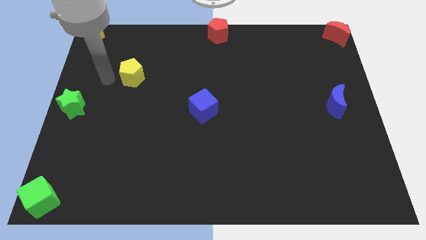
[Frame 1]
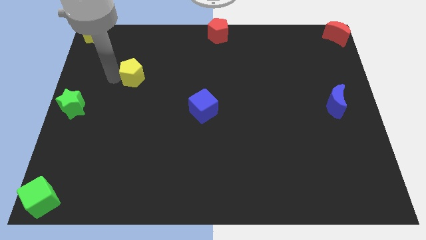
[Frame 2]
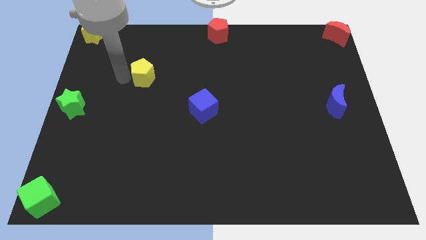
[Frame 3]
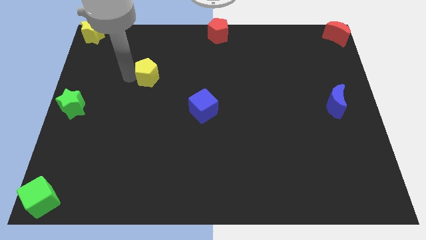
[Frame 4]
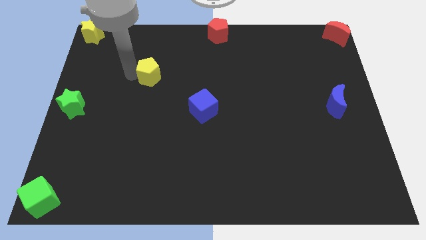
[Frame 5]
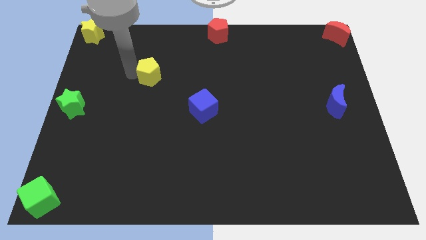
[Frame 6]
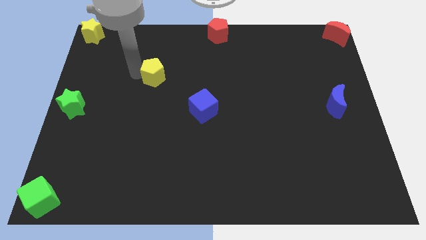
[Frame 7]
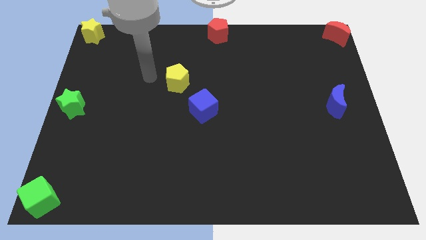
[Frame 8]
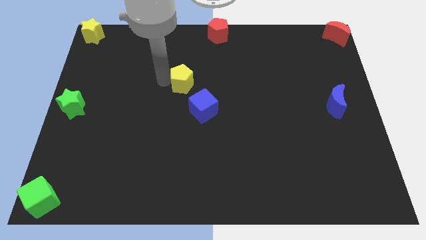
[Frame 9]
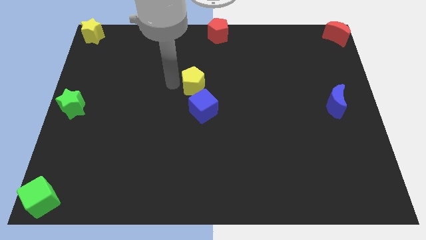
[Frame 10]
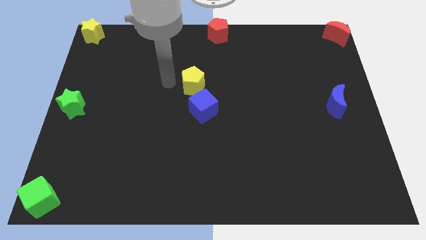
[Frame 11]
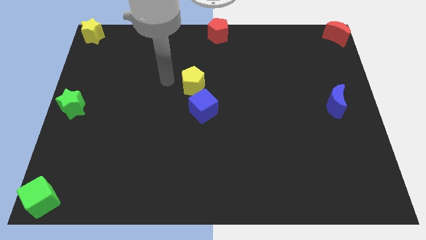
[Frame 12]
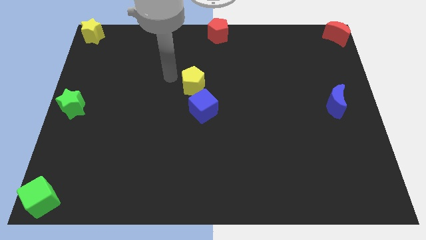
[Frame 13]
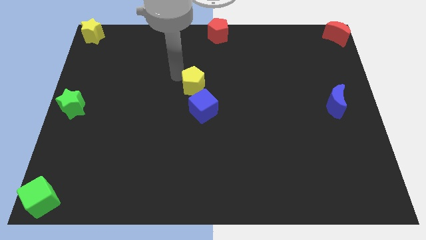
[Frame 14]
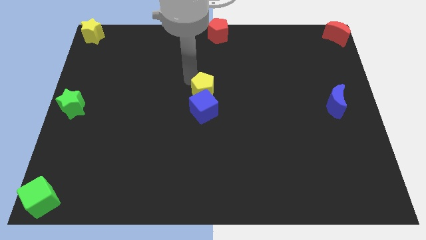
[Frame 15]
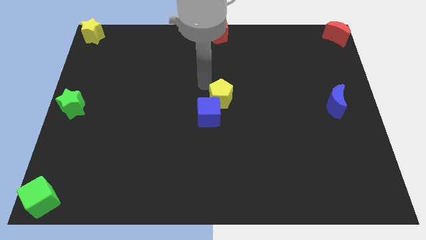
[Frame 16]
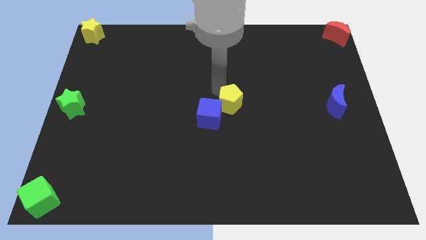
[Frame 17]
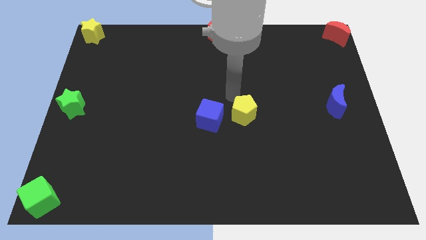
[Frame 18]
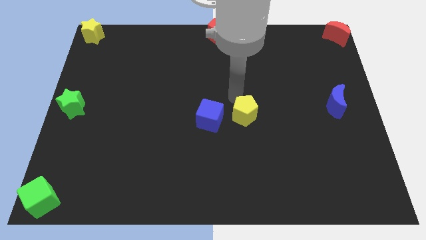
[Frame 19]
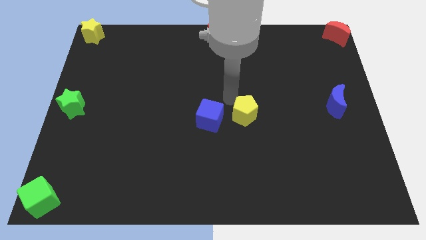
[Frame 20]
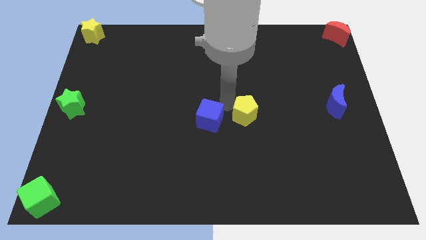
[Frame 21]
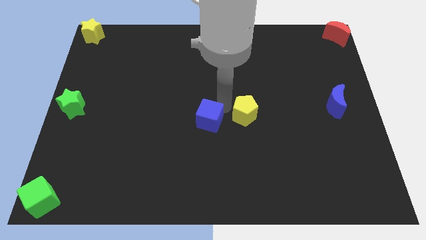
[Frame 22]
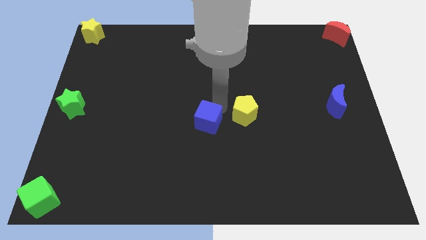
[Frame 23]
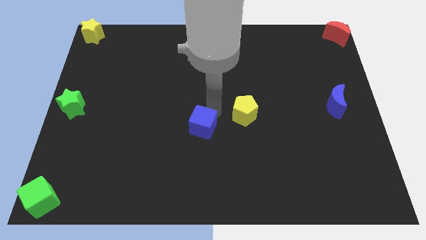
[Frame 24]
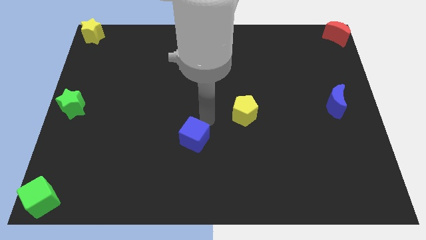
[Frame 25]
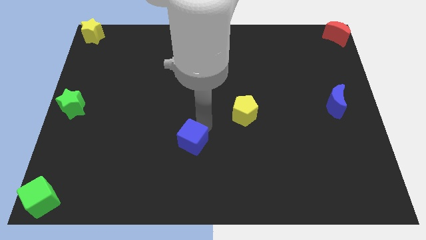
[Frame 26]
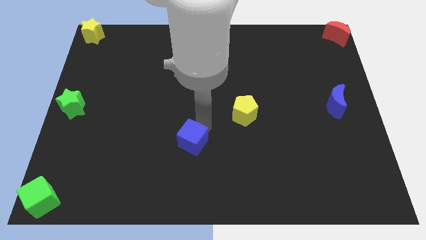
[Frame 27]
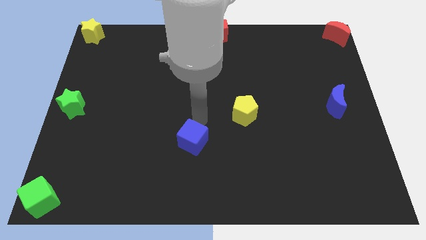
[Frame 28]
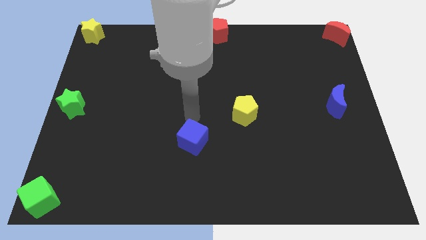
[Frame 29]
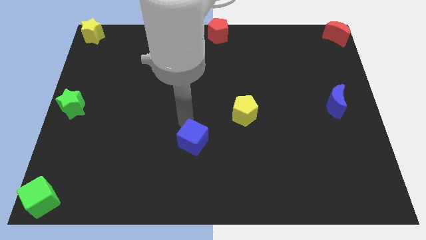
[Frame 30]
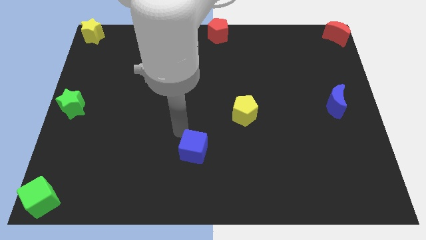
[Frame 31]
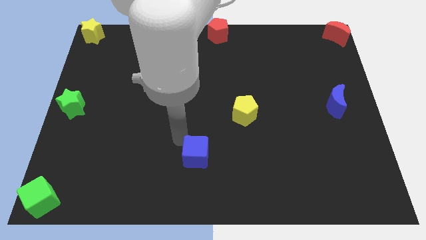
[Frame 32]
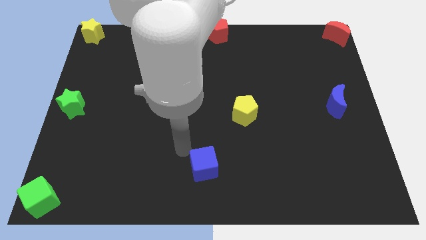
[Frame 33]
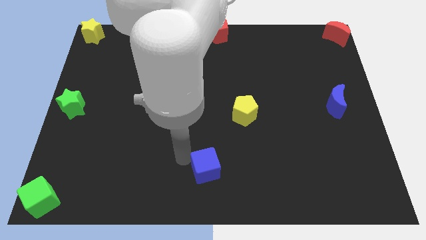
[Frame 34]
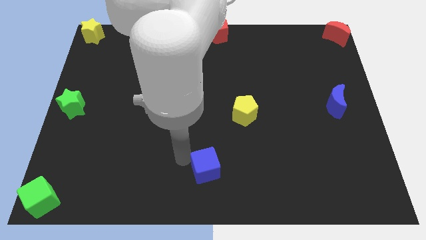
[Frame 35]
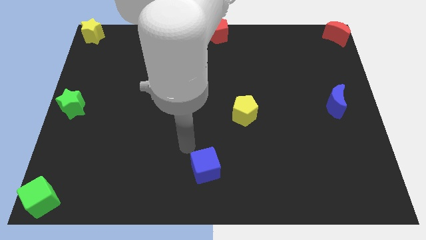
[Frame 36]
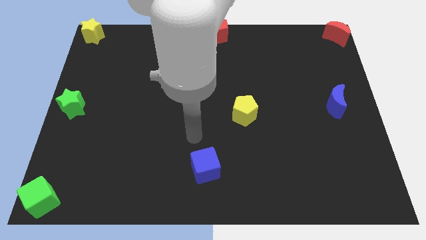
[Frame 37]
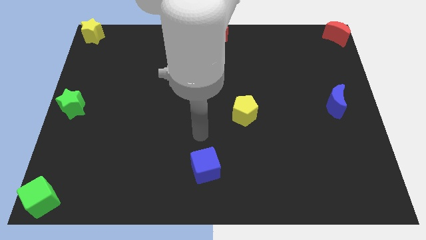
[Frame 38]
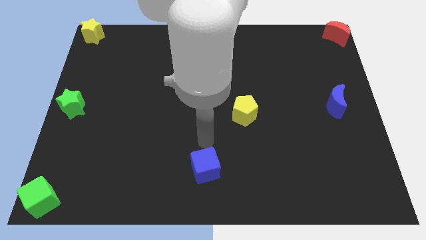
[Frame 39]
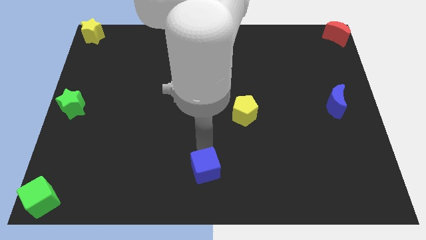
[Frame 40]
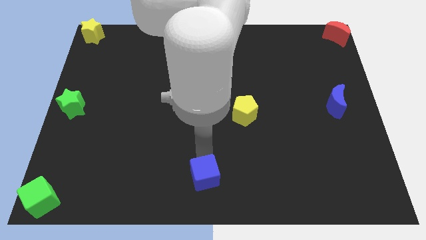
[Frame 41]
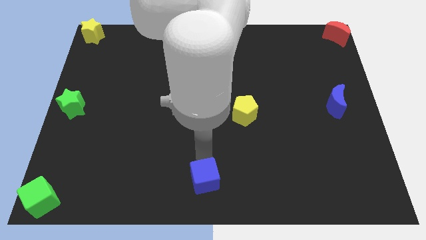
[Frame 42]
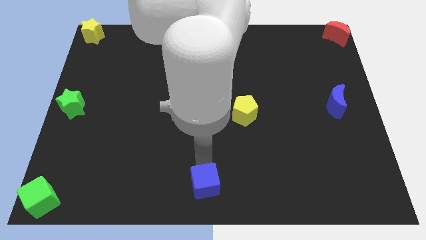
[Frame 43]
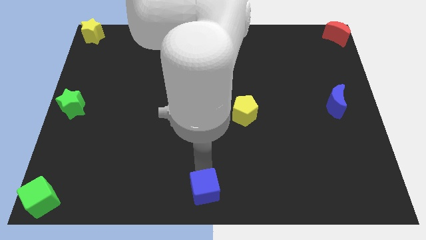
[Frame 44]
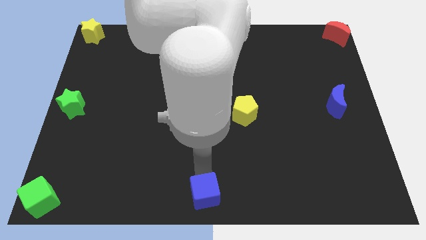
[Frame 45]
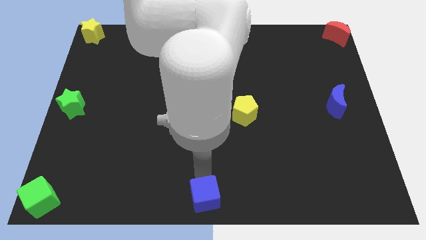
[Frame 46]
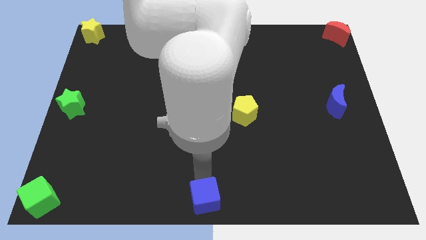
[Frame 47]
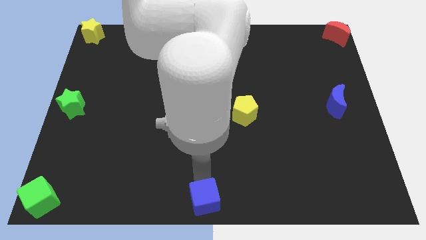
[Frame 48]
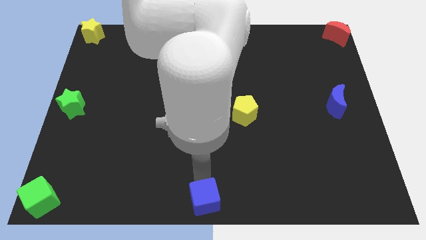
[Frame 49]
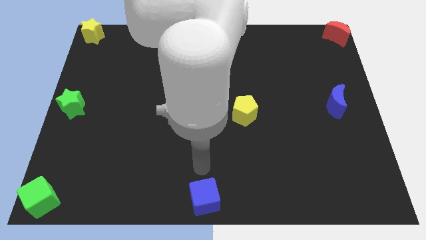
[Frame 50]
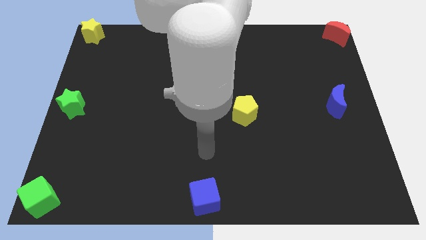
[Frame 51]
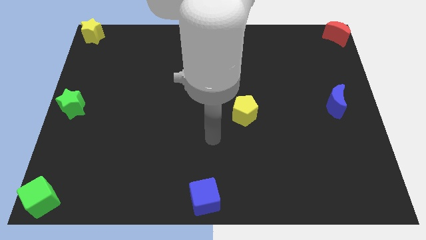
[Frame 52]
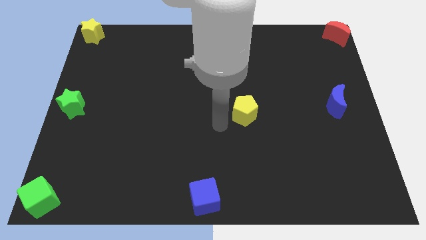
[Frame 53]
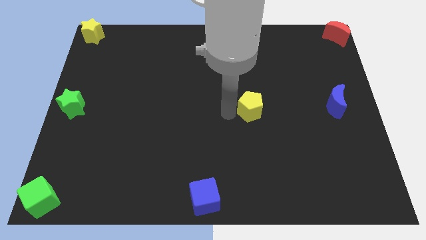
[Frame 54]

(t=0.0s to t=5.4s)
push the blue cube towards the bottom center of the board

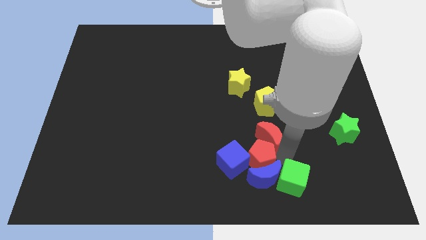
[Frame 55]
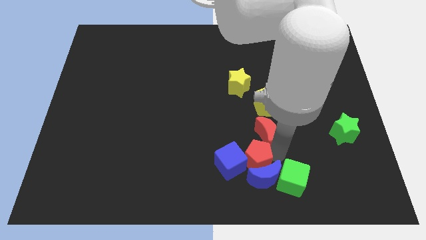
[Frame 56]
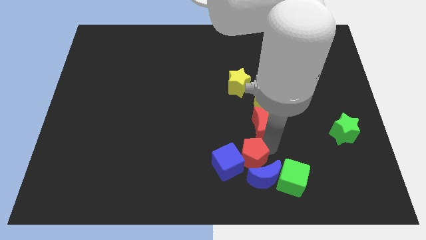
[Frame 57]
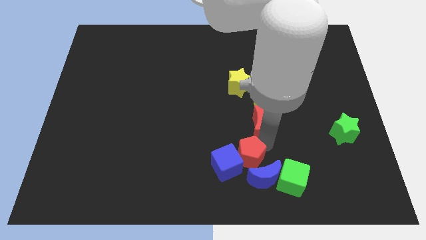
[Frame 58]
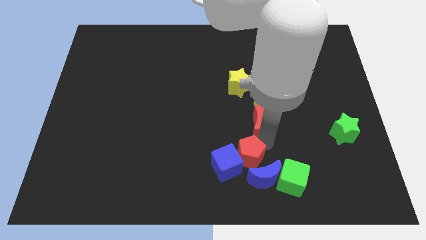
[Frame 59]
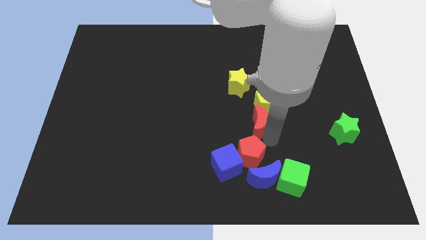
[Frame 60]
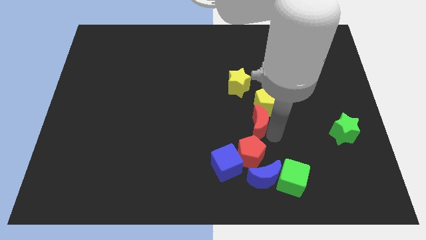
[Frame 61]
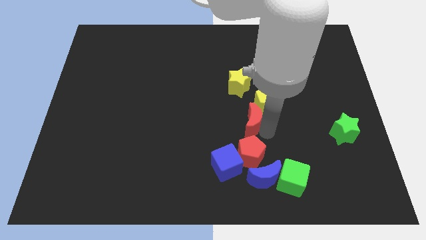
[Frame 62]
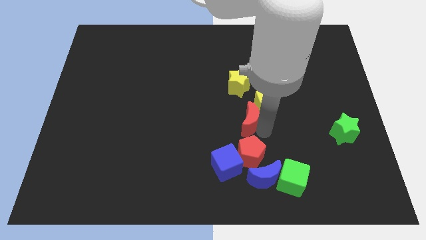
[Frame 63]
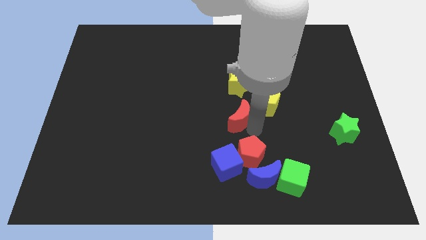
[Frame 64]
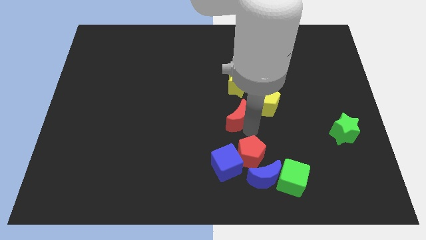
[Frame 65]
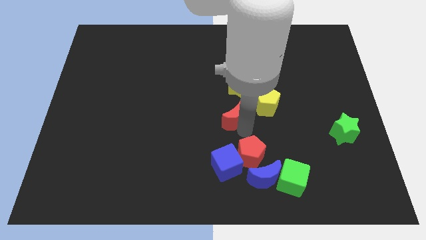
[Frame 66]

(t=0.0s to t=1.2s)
push the red moon towards the center

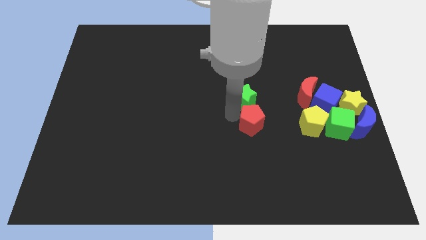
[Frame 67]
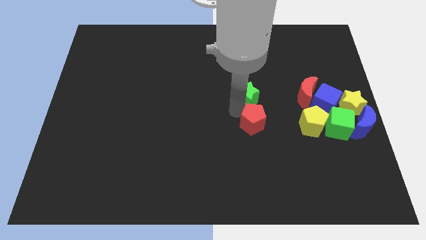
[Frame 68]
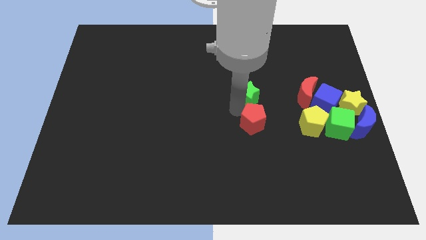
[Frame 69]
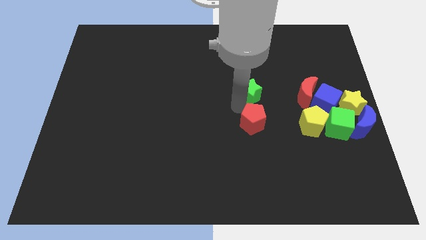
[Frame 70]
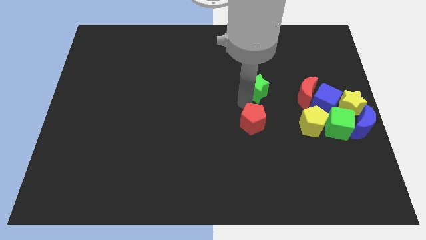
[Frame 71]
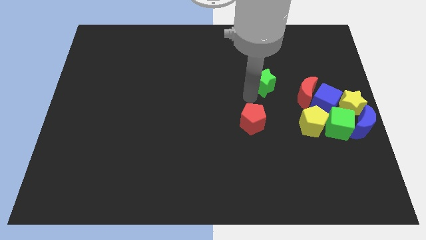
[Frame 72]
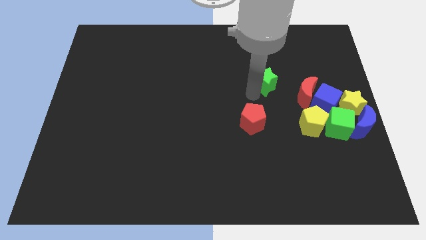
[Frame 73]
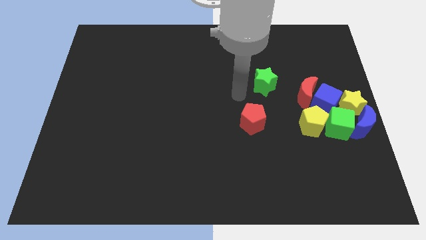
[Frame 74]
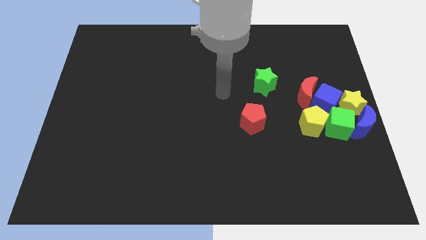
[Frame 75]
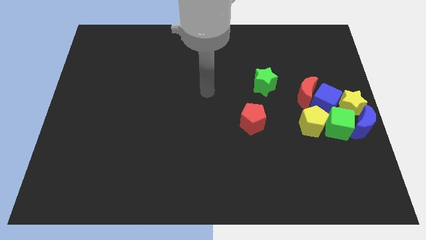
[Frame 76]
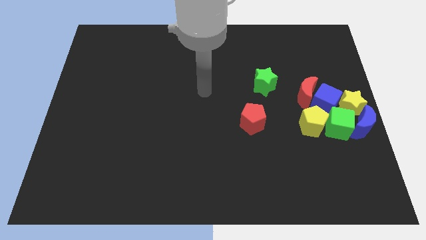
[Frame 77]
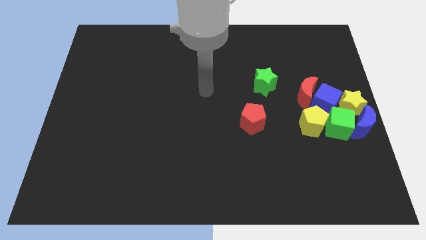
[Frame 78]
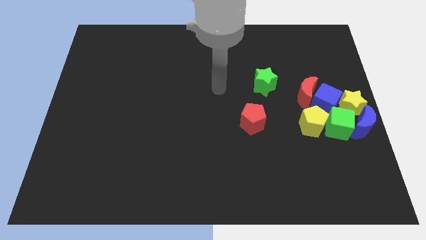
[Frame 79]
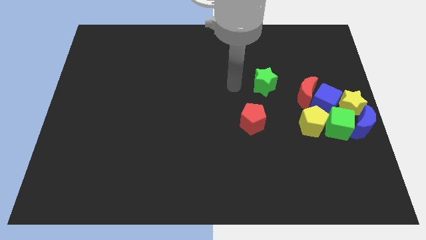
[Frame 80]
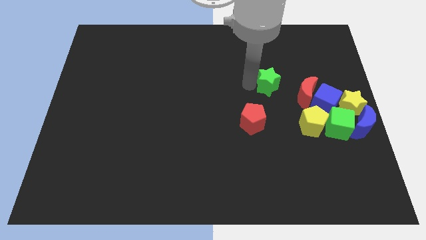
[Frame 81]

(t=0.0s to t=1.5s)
separate the green star from the red pentagon

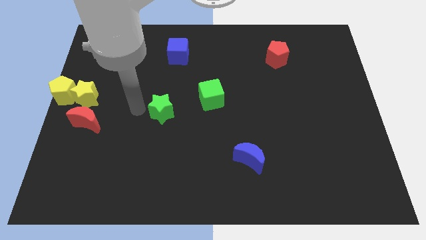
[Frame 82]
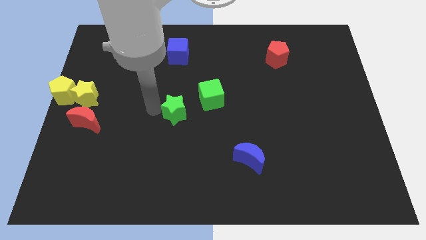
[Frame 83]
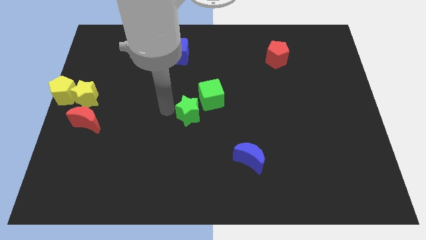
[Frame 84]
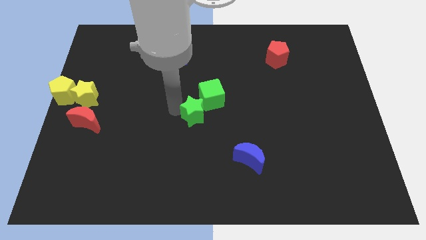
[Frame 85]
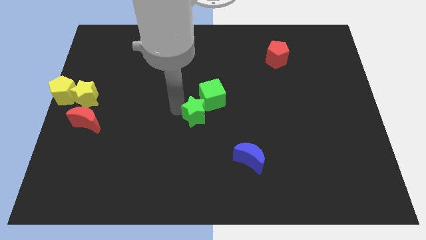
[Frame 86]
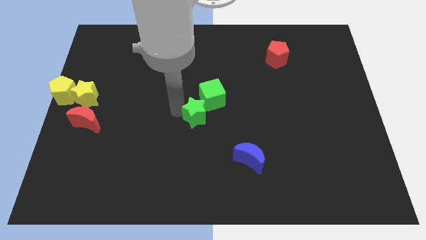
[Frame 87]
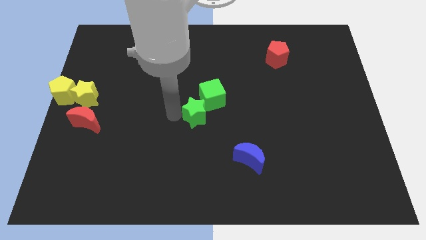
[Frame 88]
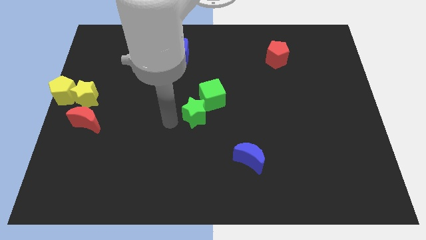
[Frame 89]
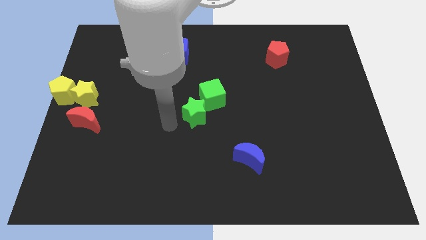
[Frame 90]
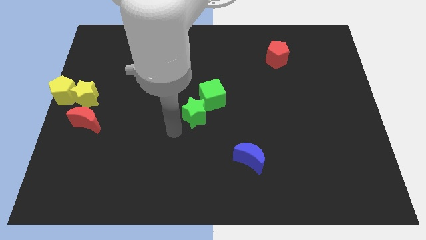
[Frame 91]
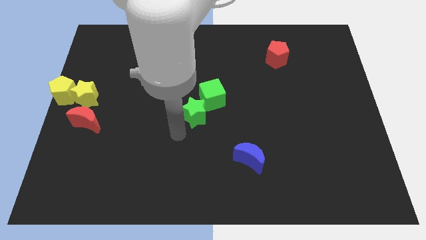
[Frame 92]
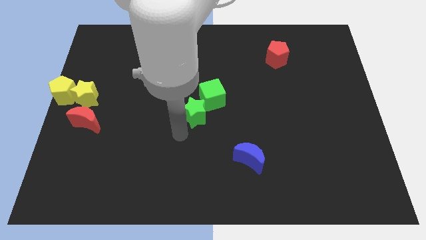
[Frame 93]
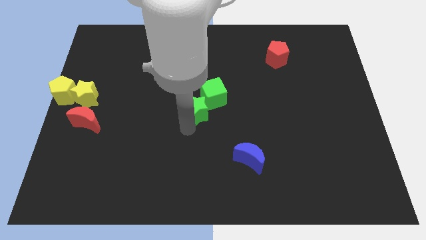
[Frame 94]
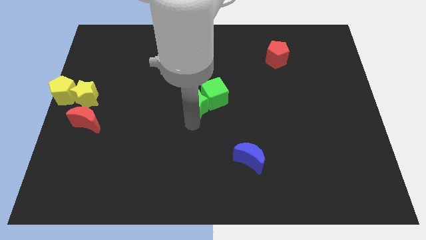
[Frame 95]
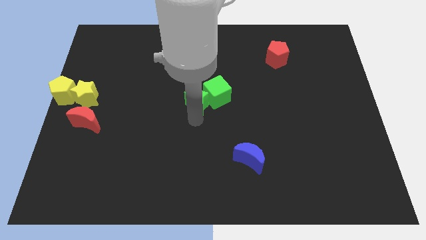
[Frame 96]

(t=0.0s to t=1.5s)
push the green star to the left of the green cube
